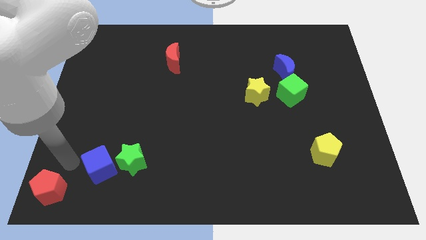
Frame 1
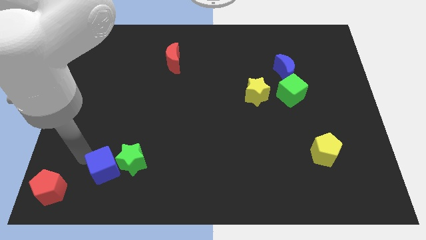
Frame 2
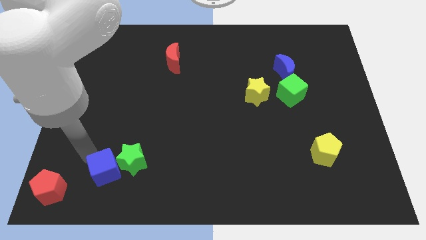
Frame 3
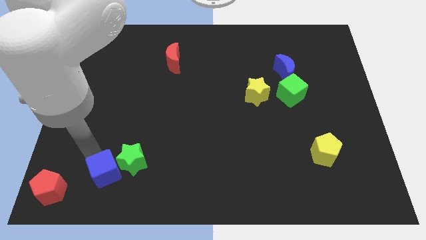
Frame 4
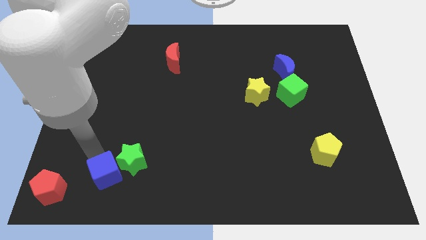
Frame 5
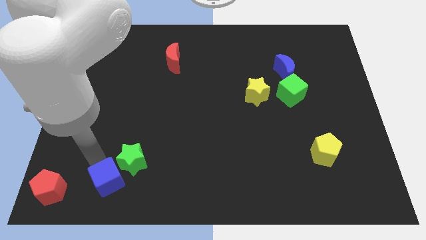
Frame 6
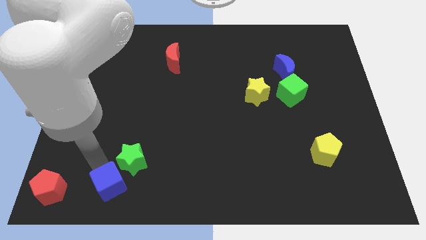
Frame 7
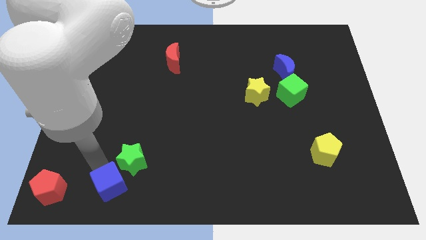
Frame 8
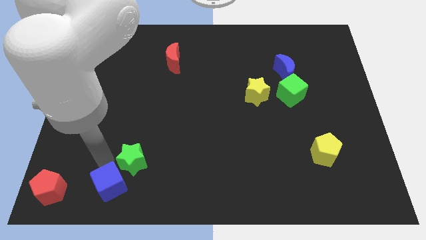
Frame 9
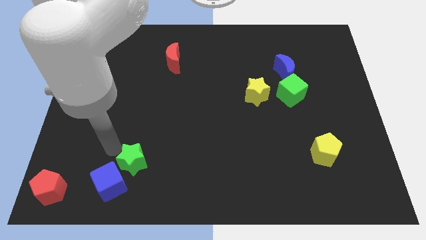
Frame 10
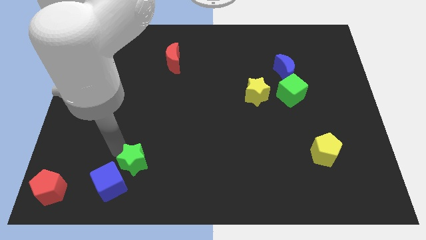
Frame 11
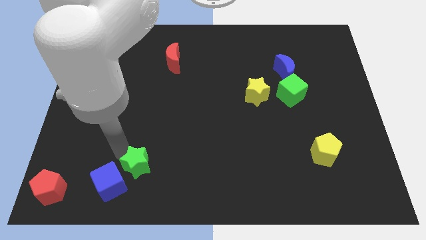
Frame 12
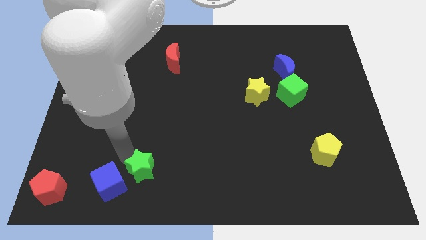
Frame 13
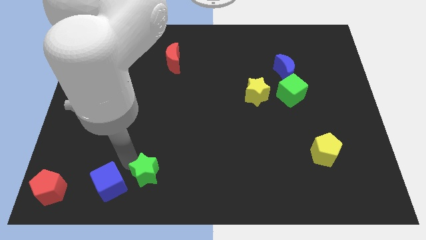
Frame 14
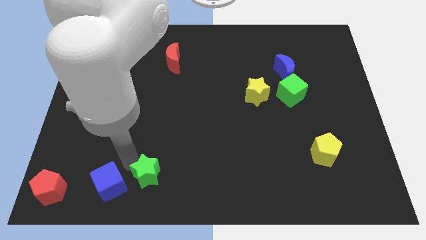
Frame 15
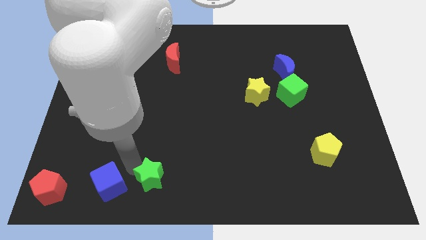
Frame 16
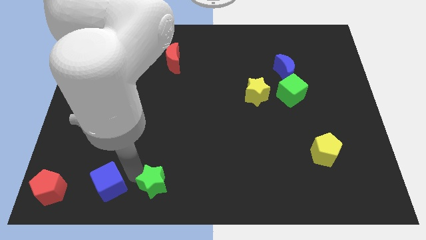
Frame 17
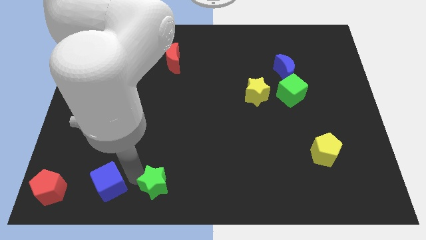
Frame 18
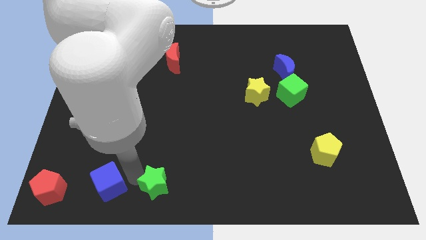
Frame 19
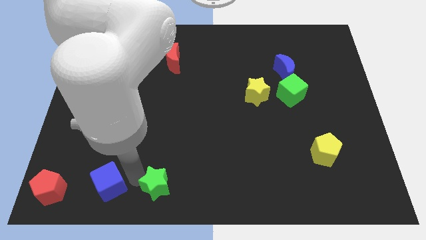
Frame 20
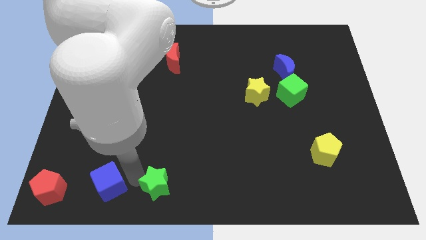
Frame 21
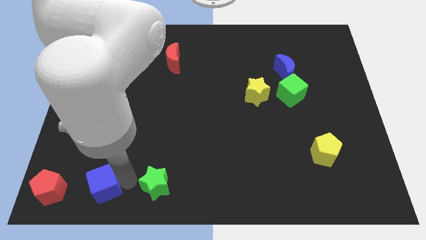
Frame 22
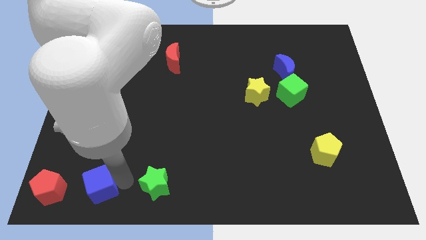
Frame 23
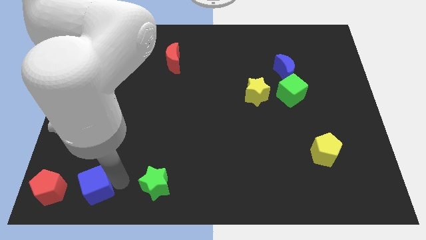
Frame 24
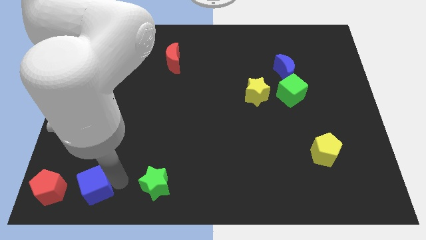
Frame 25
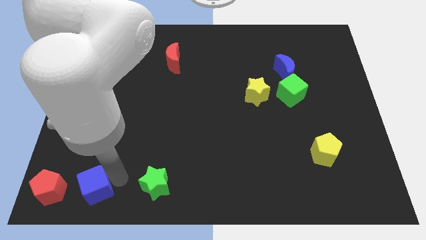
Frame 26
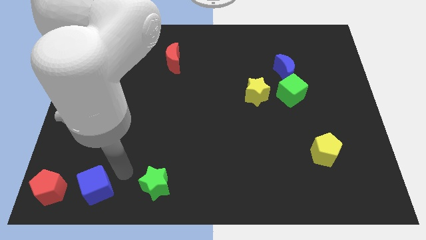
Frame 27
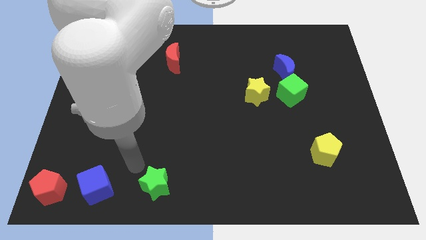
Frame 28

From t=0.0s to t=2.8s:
place blue cube to the right of red pentagon

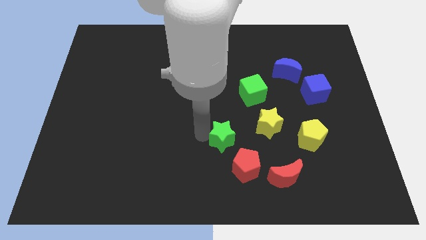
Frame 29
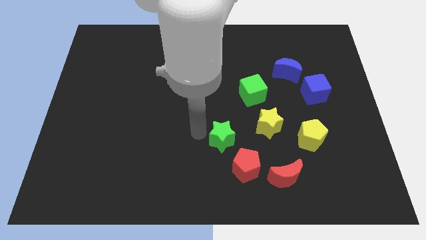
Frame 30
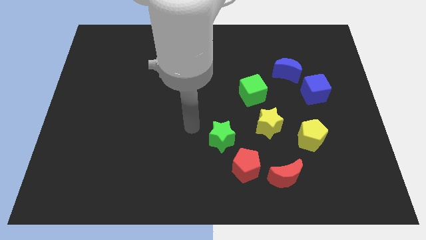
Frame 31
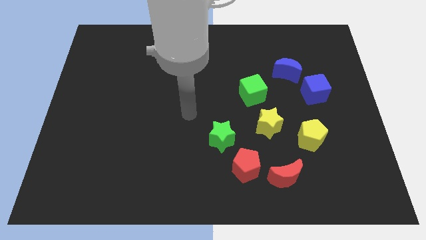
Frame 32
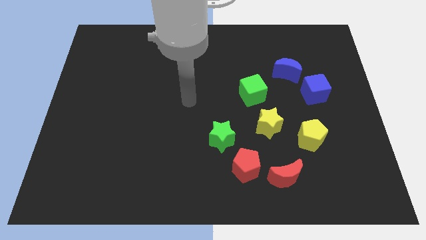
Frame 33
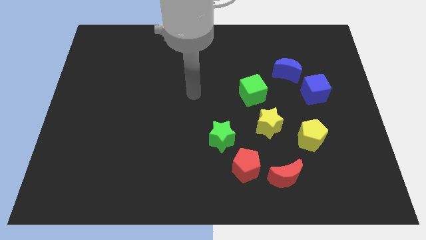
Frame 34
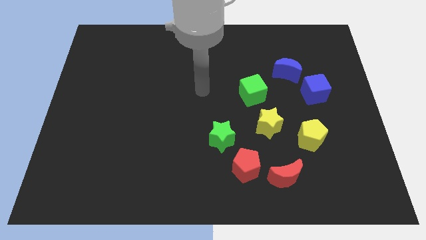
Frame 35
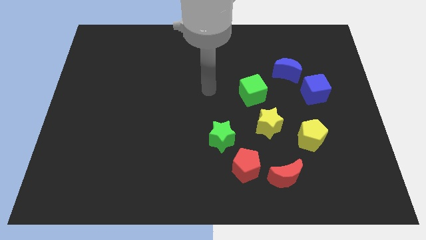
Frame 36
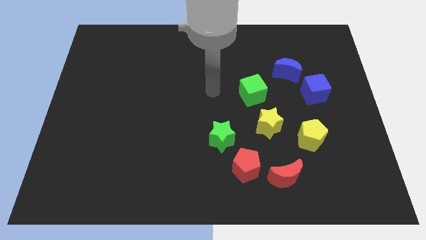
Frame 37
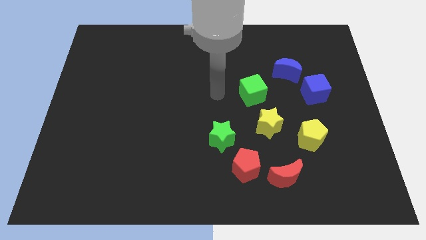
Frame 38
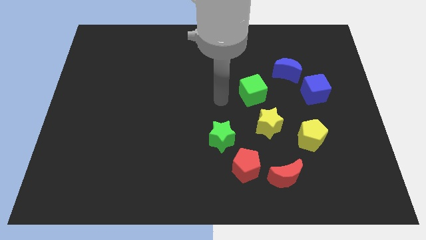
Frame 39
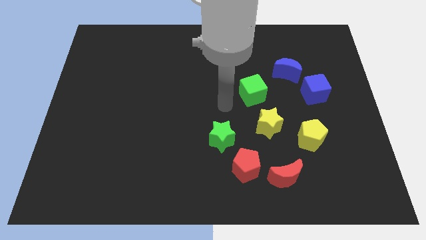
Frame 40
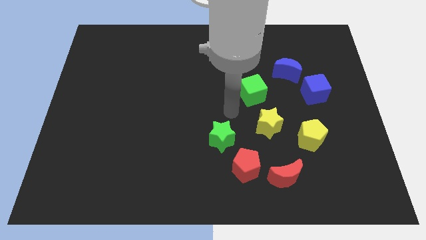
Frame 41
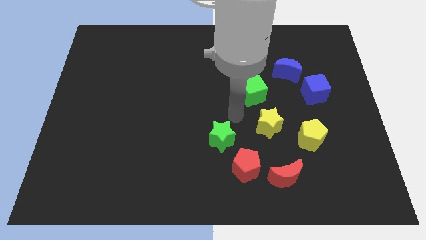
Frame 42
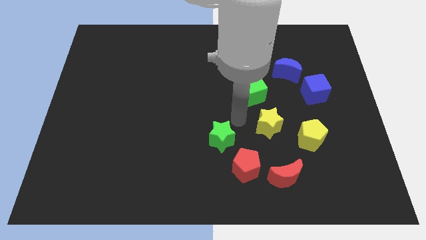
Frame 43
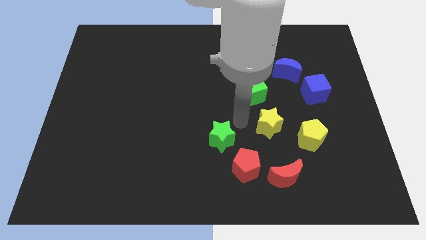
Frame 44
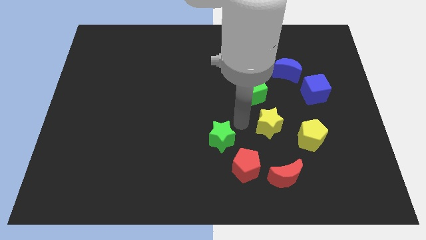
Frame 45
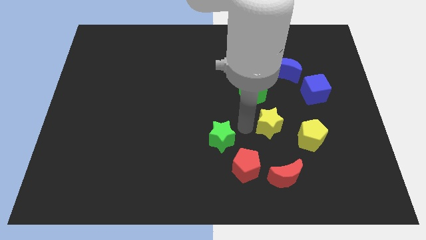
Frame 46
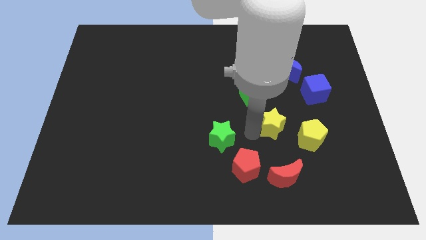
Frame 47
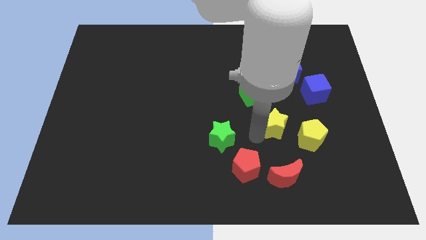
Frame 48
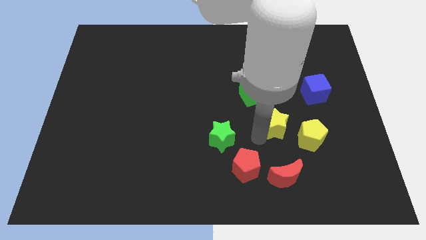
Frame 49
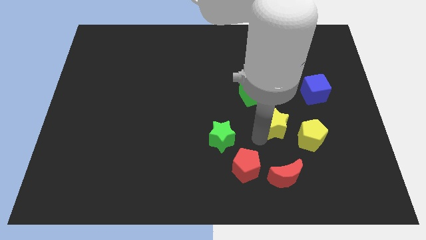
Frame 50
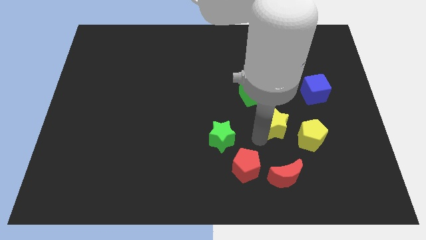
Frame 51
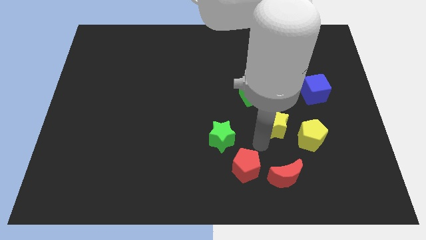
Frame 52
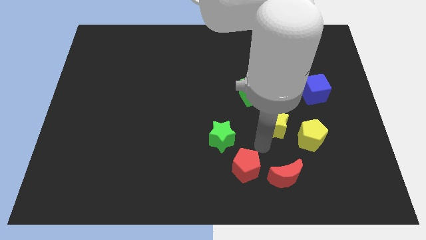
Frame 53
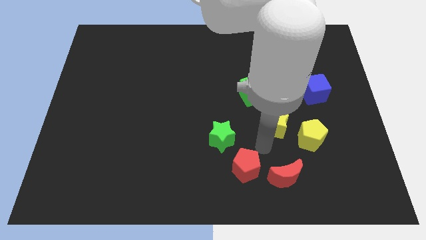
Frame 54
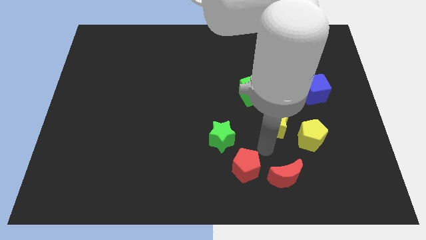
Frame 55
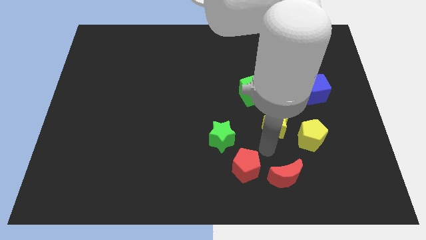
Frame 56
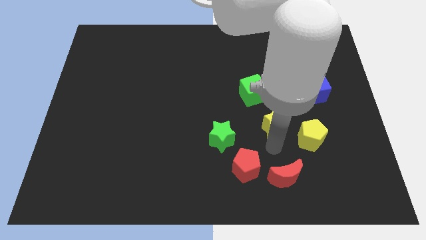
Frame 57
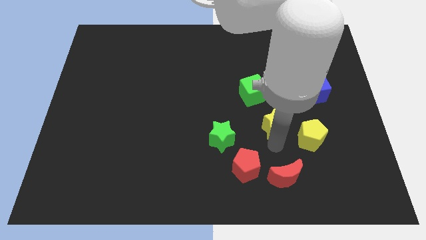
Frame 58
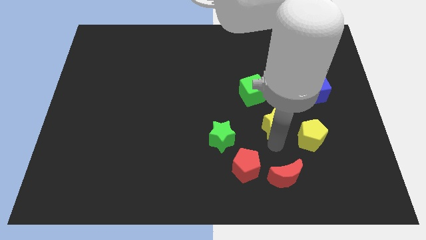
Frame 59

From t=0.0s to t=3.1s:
place your arm in between red and yellow pentagon

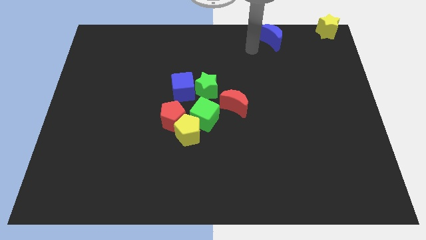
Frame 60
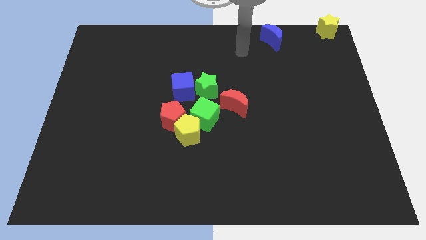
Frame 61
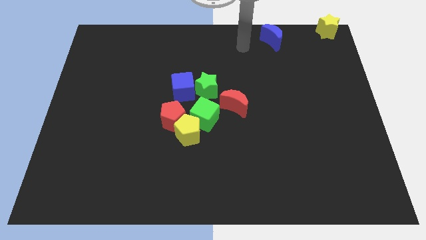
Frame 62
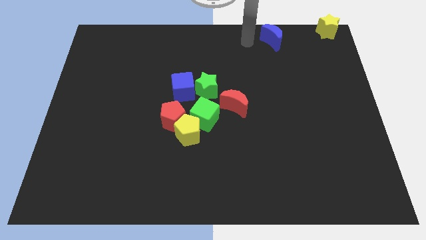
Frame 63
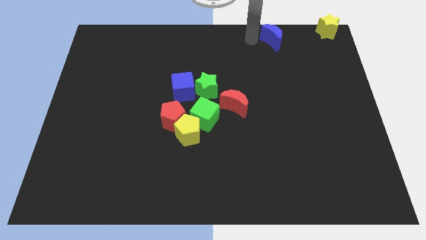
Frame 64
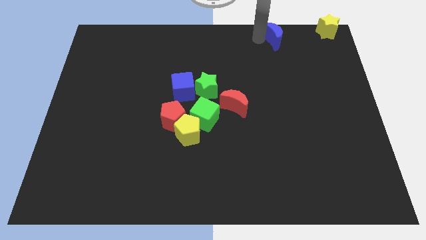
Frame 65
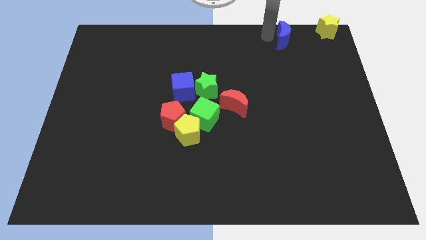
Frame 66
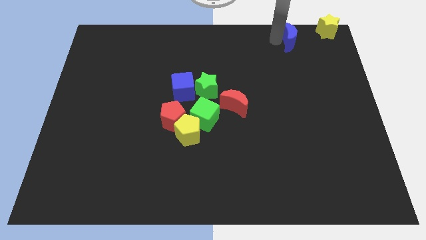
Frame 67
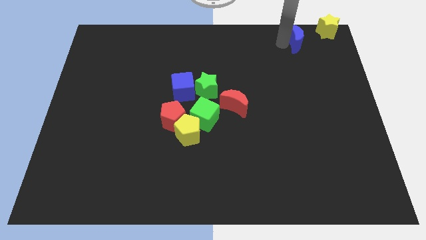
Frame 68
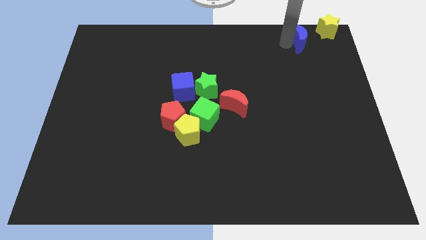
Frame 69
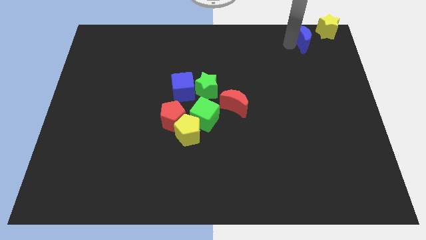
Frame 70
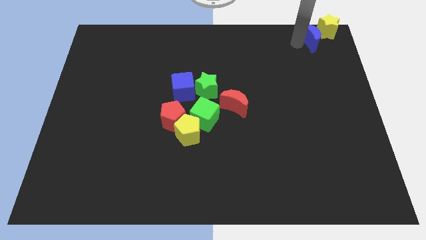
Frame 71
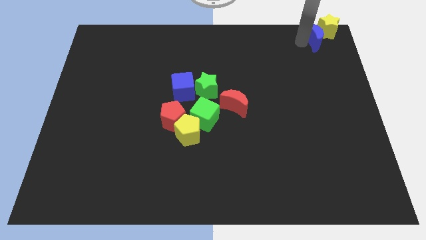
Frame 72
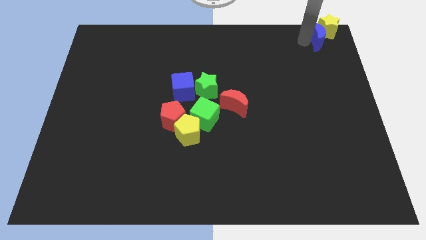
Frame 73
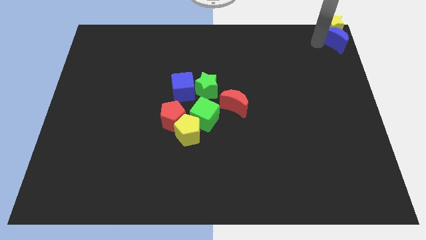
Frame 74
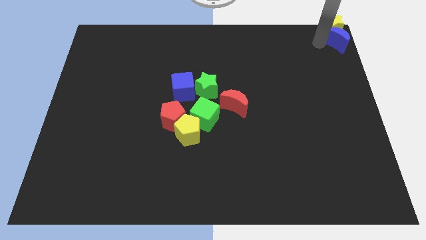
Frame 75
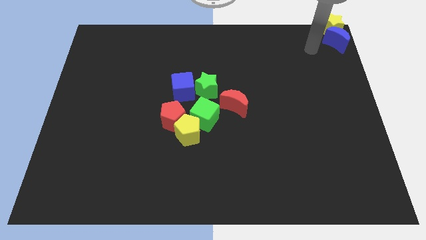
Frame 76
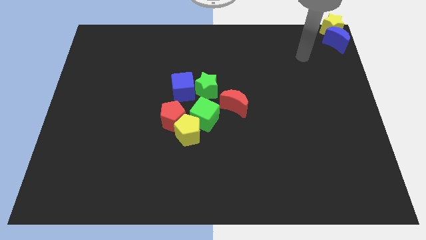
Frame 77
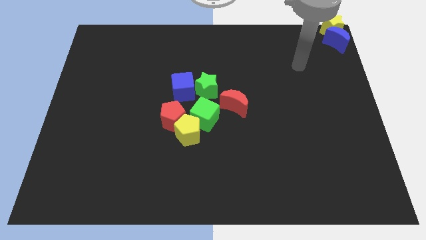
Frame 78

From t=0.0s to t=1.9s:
put the blue semicircle and yellow star together

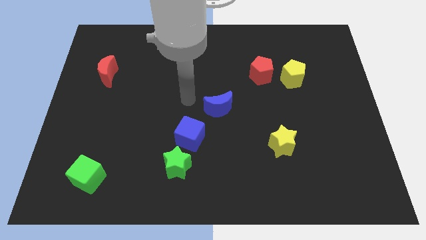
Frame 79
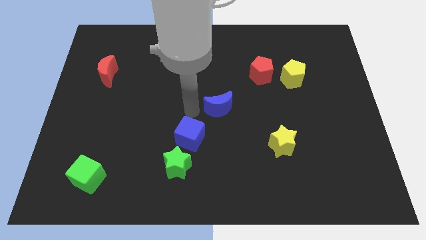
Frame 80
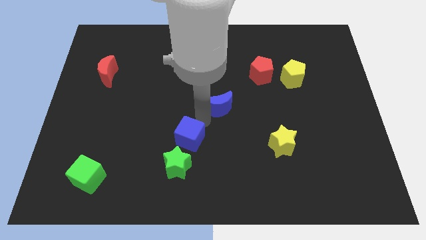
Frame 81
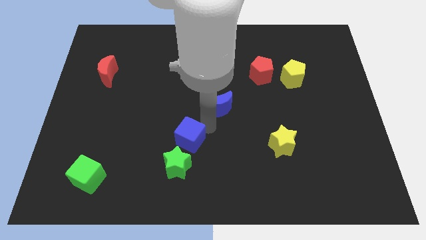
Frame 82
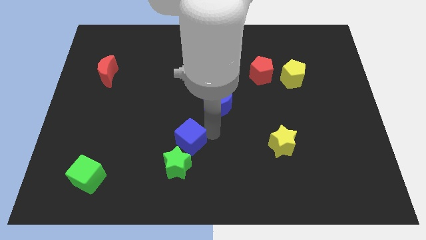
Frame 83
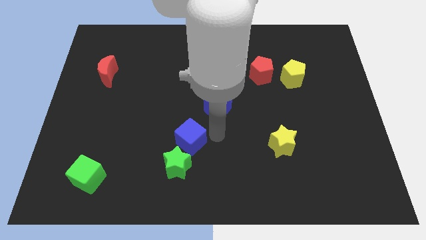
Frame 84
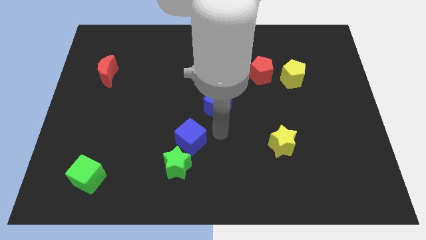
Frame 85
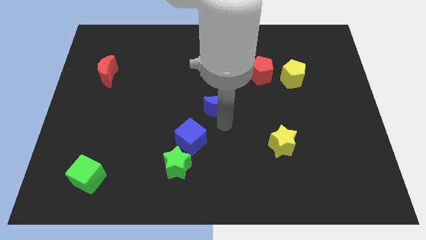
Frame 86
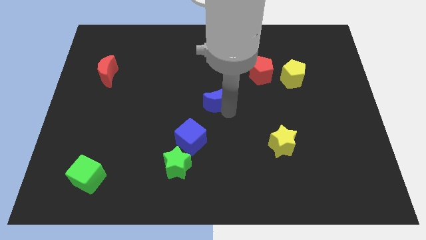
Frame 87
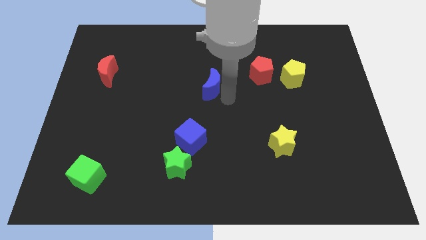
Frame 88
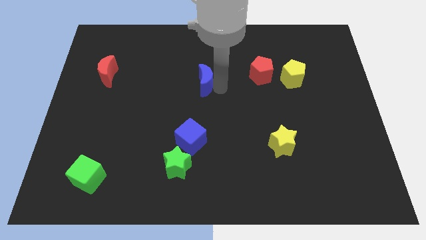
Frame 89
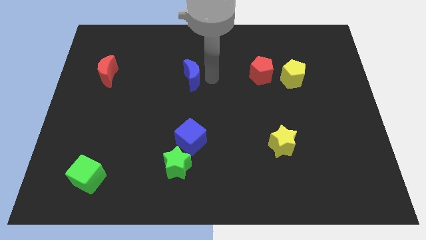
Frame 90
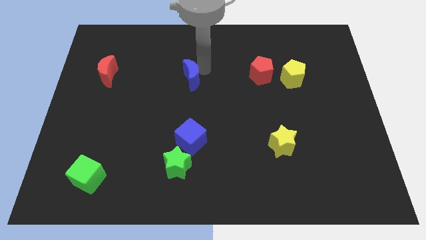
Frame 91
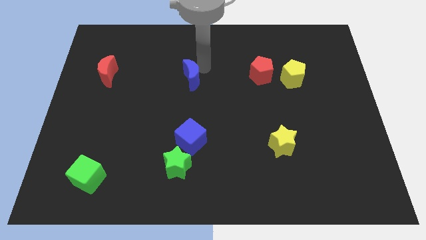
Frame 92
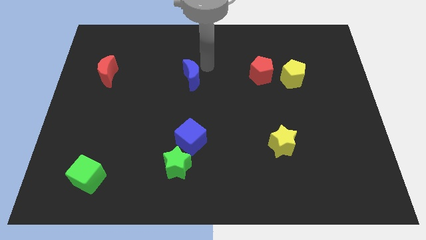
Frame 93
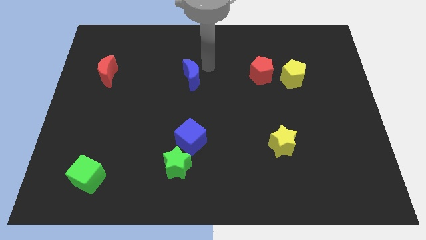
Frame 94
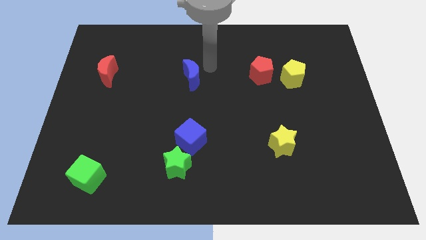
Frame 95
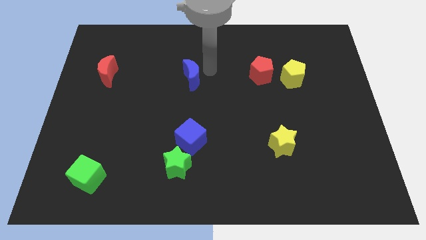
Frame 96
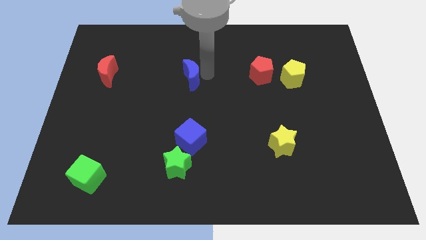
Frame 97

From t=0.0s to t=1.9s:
push the blue moon towards the top of the blue cube
